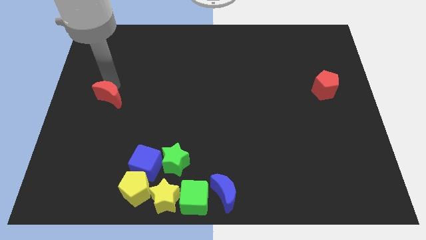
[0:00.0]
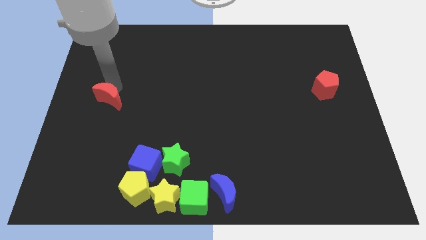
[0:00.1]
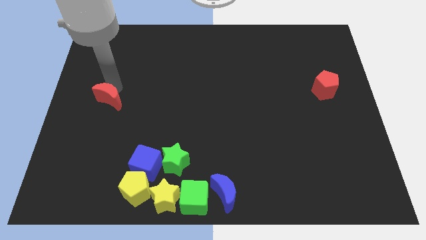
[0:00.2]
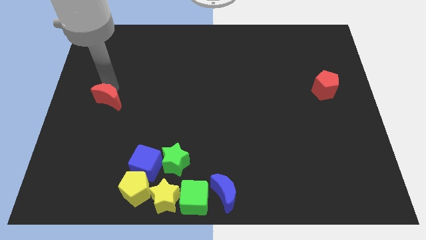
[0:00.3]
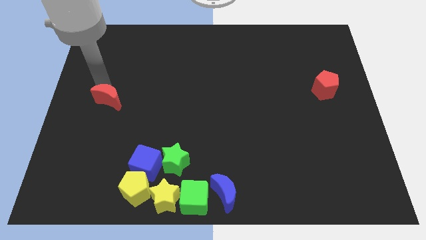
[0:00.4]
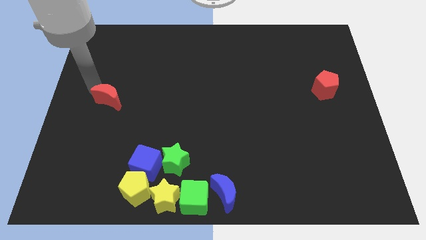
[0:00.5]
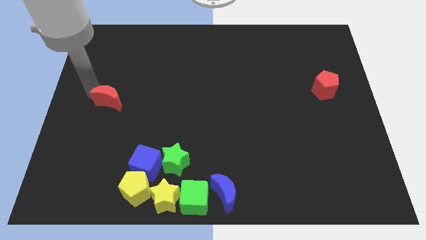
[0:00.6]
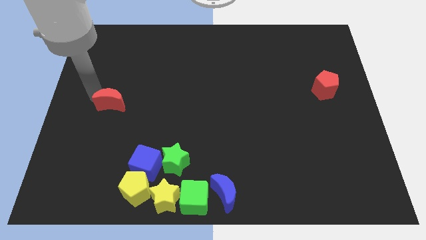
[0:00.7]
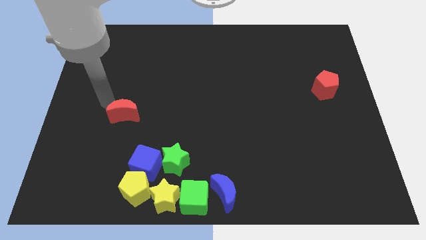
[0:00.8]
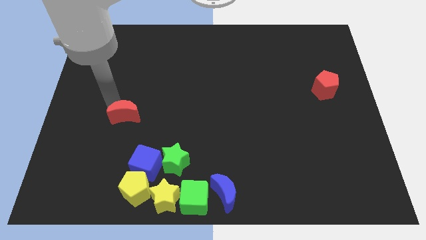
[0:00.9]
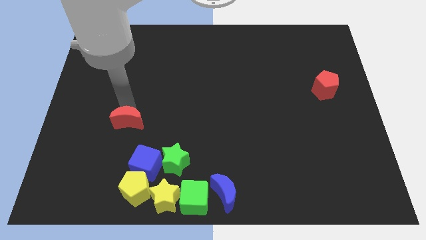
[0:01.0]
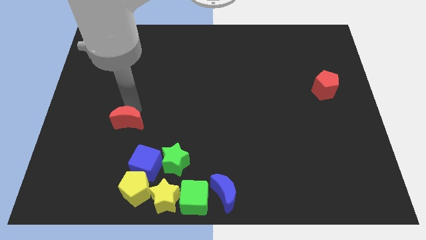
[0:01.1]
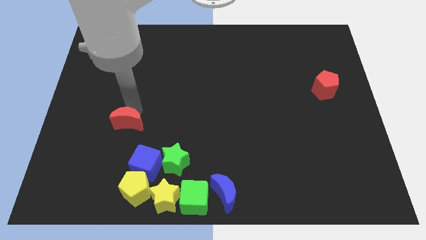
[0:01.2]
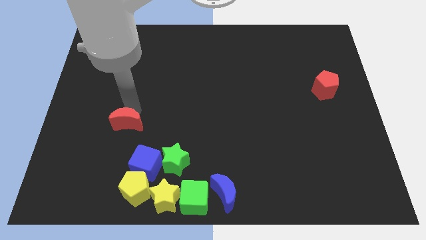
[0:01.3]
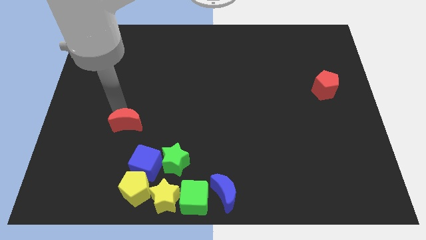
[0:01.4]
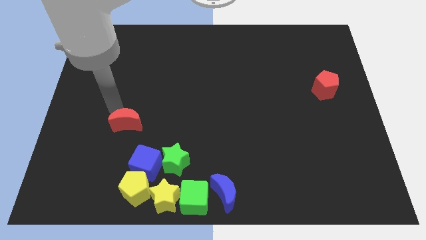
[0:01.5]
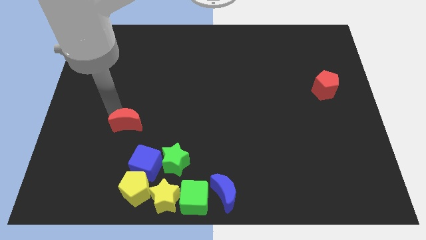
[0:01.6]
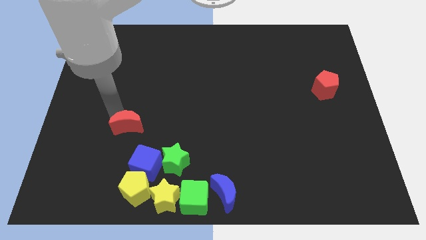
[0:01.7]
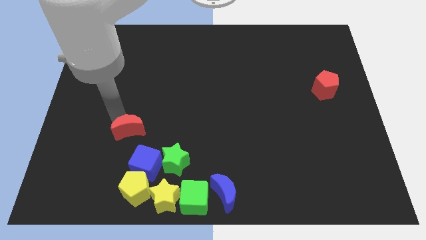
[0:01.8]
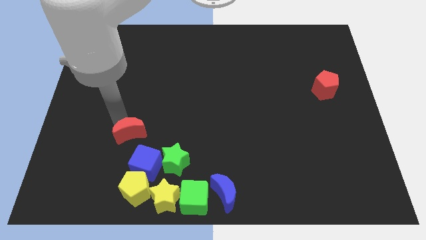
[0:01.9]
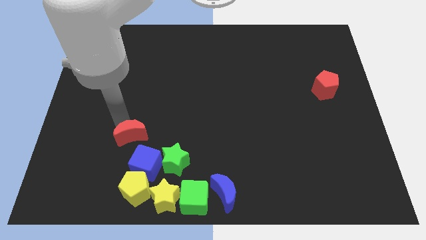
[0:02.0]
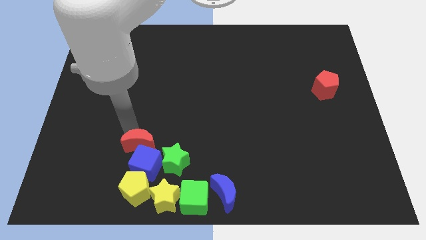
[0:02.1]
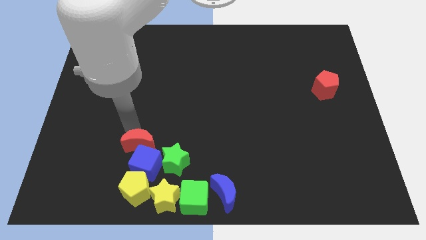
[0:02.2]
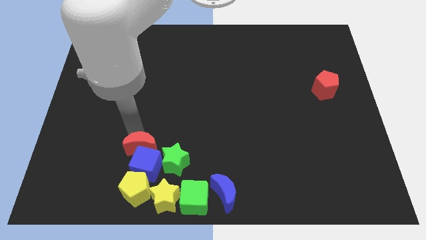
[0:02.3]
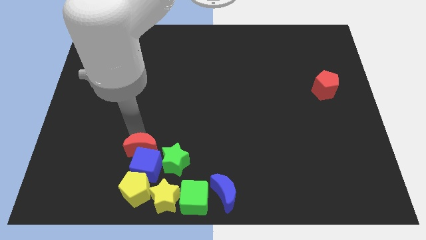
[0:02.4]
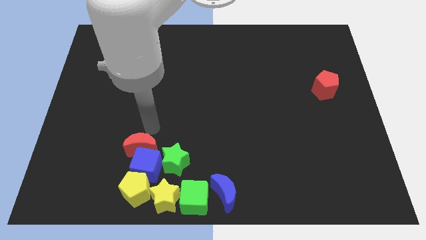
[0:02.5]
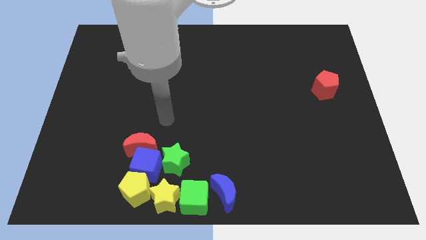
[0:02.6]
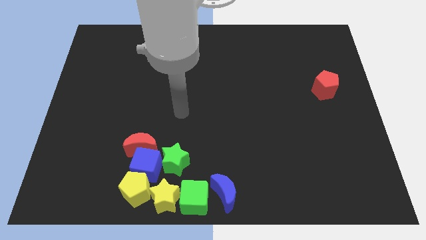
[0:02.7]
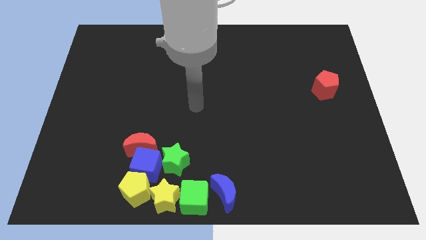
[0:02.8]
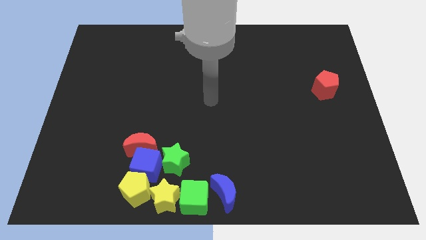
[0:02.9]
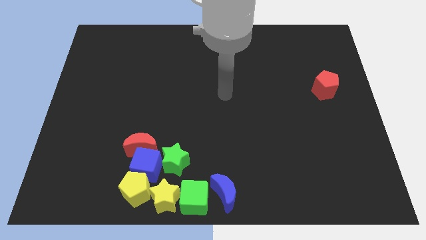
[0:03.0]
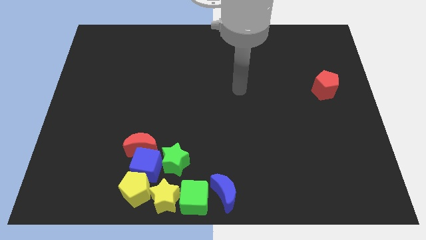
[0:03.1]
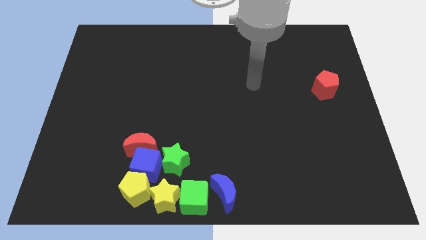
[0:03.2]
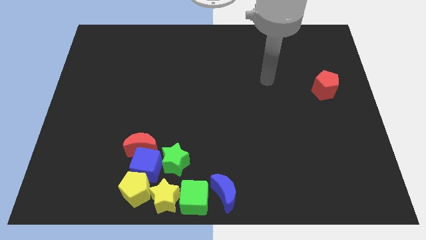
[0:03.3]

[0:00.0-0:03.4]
move the red moon into the blue cube

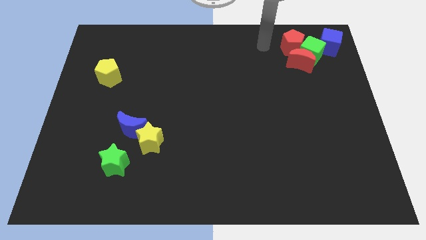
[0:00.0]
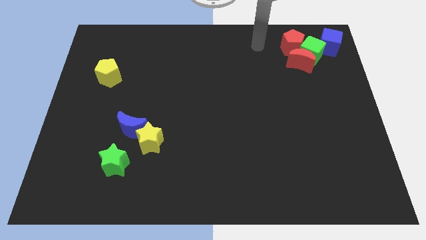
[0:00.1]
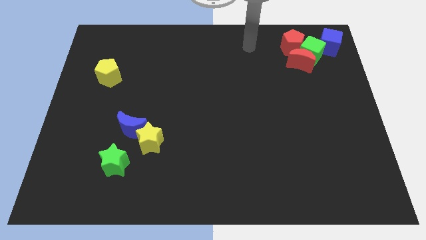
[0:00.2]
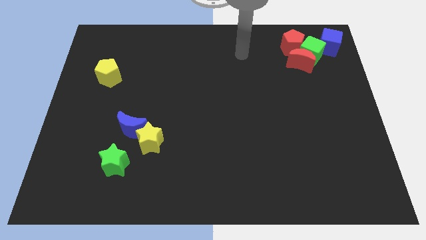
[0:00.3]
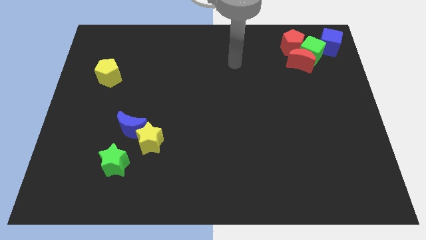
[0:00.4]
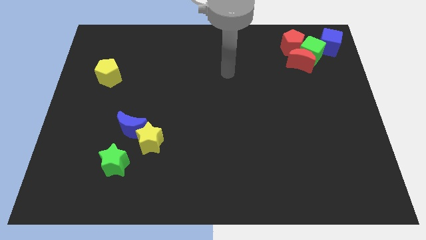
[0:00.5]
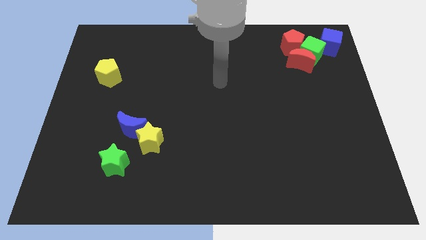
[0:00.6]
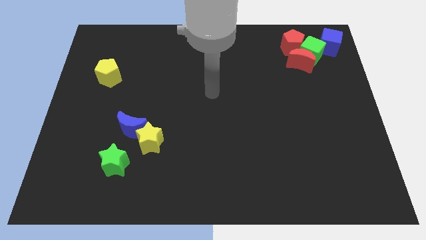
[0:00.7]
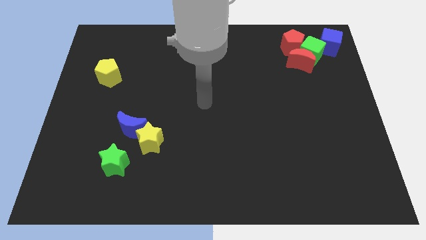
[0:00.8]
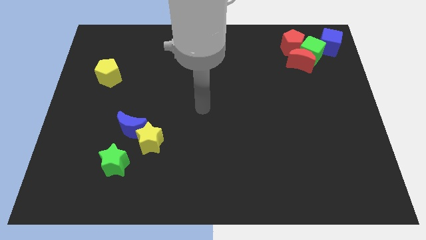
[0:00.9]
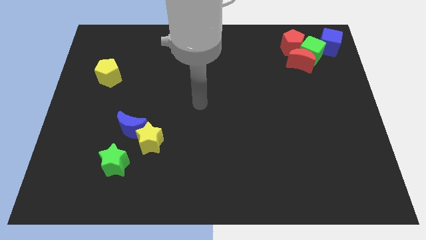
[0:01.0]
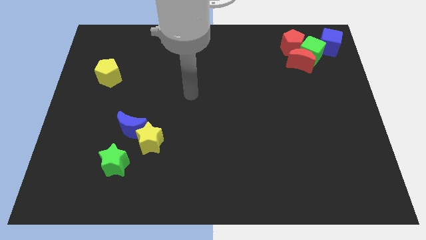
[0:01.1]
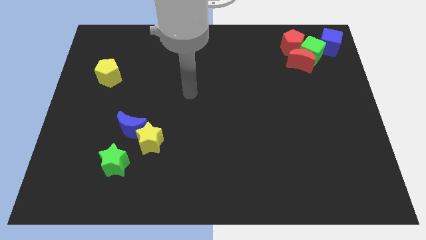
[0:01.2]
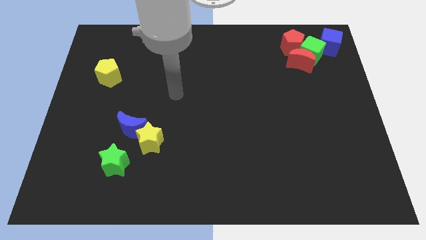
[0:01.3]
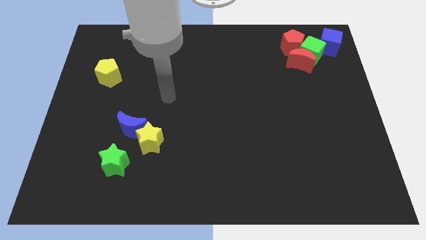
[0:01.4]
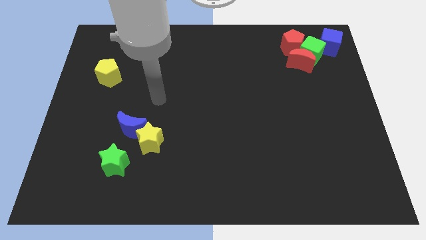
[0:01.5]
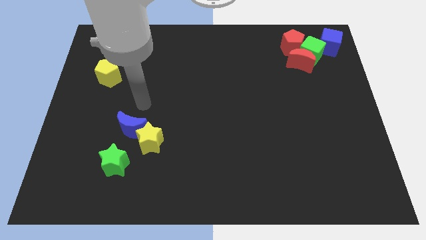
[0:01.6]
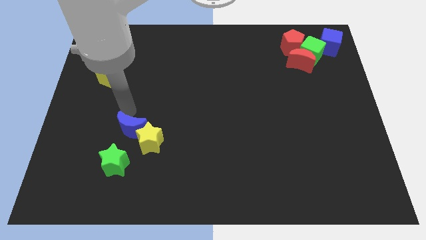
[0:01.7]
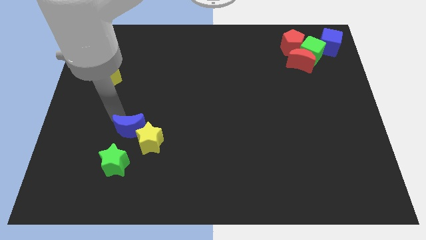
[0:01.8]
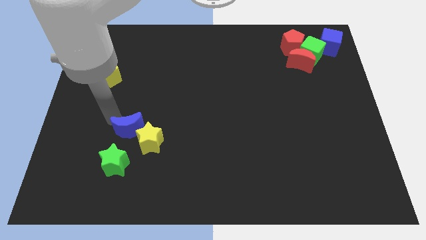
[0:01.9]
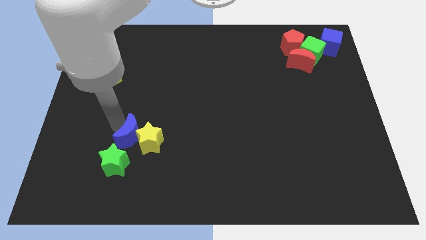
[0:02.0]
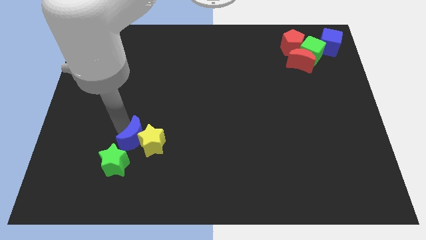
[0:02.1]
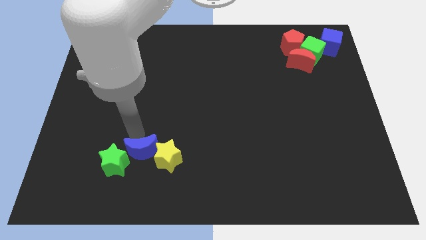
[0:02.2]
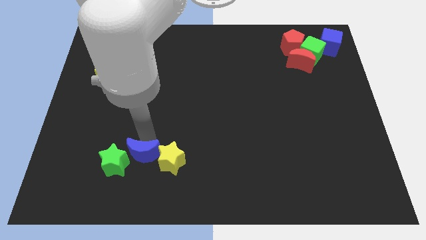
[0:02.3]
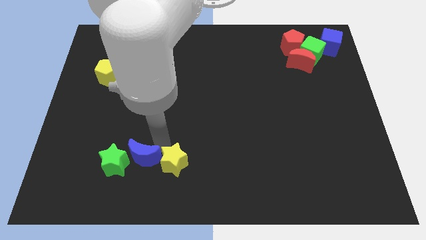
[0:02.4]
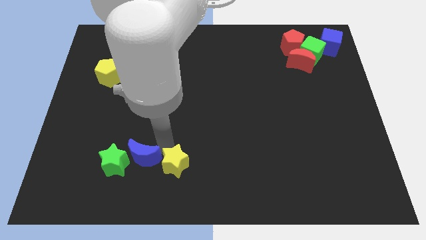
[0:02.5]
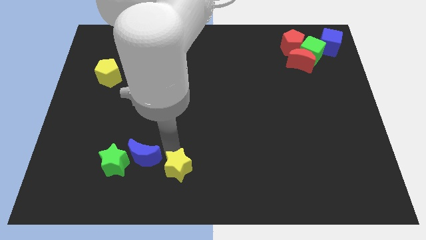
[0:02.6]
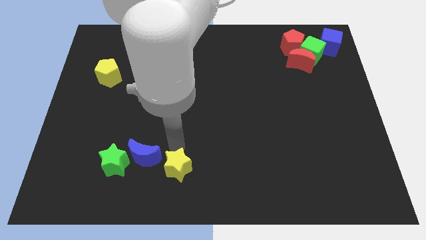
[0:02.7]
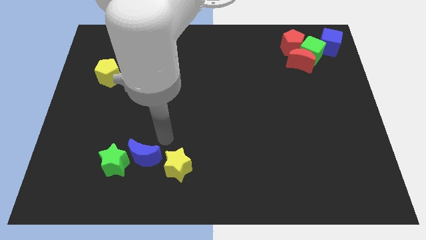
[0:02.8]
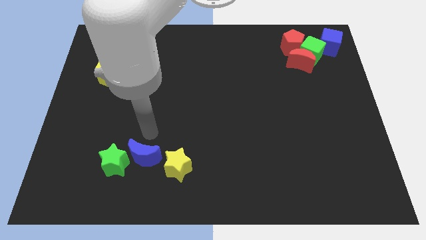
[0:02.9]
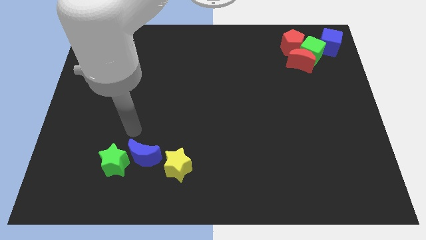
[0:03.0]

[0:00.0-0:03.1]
push the yellow star with the blue moon towards the right of the green star

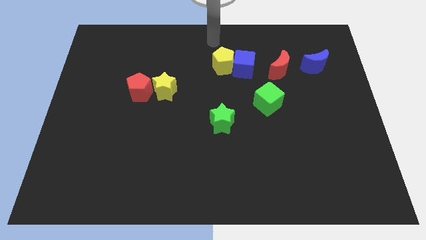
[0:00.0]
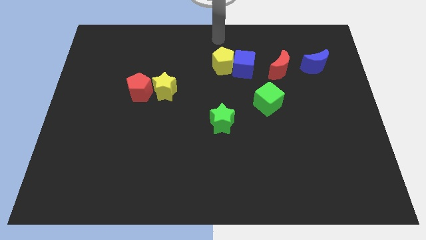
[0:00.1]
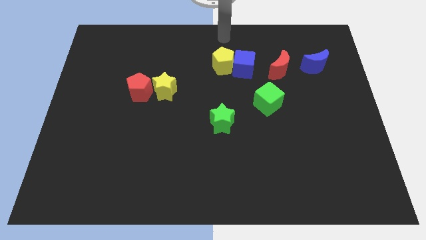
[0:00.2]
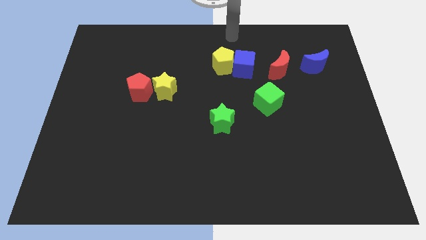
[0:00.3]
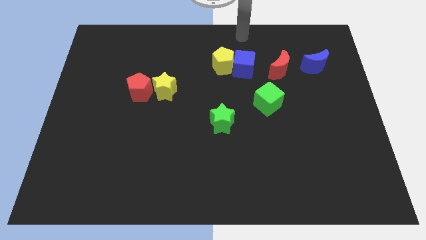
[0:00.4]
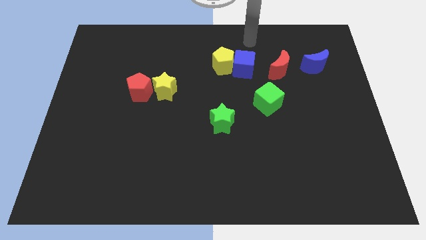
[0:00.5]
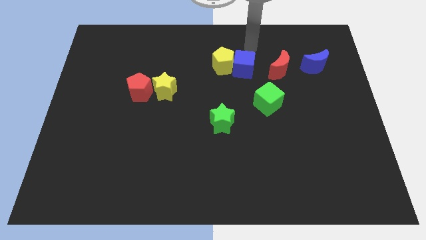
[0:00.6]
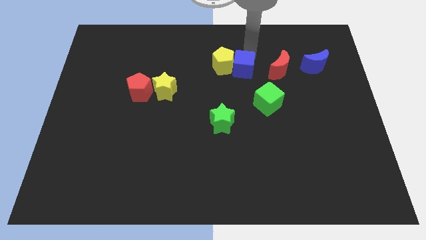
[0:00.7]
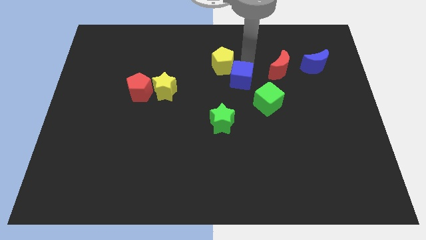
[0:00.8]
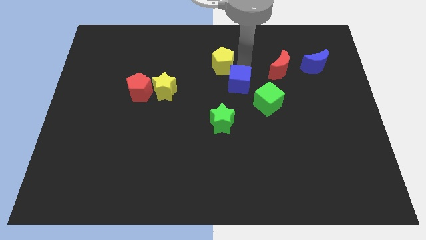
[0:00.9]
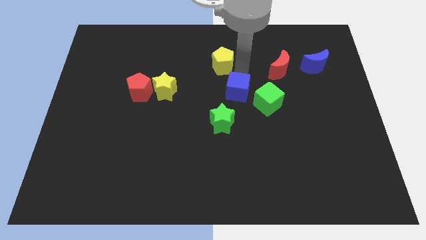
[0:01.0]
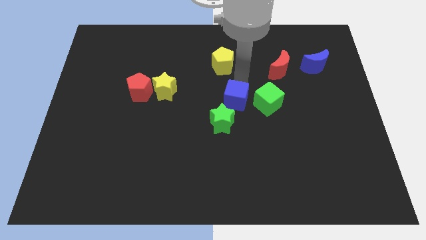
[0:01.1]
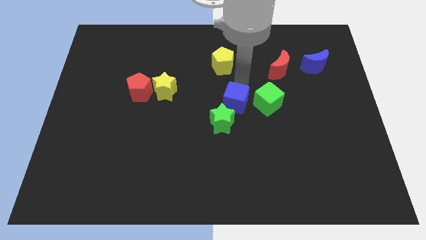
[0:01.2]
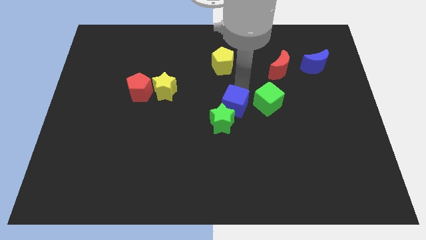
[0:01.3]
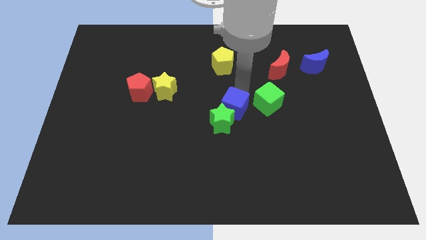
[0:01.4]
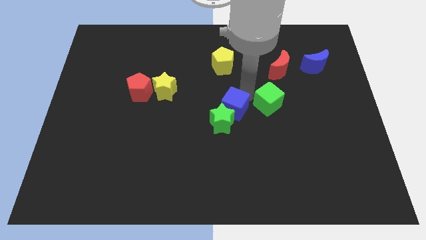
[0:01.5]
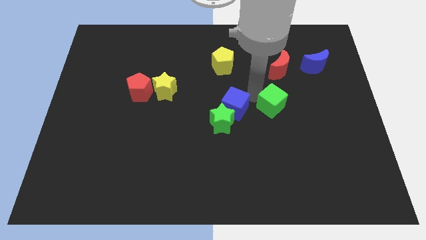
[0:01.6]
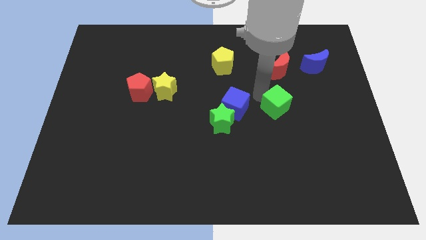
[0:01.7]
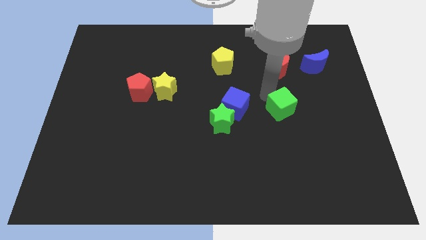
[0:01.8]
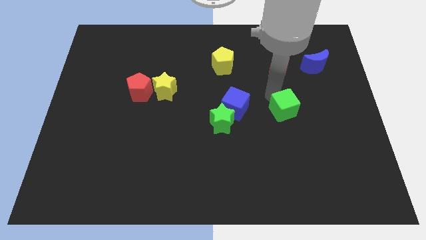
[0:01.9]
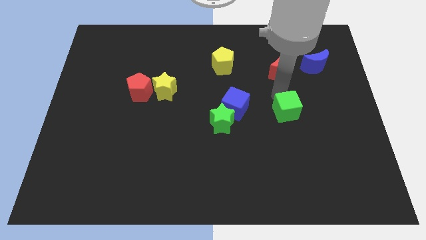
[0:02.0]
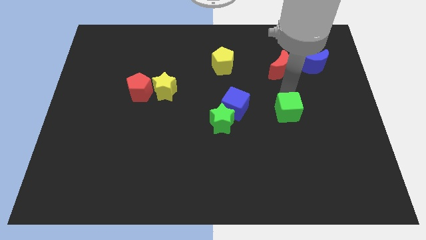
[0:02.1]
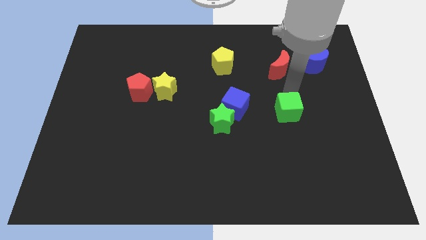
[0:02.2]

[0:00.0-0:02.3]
move the green cube below the red crescent

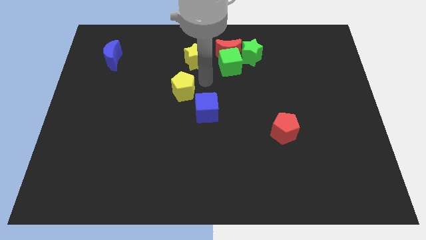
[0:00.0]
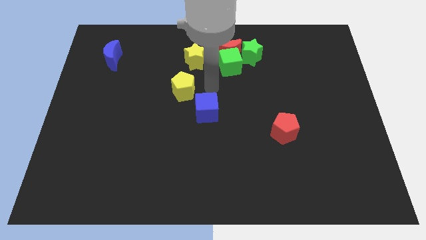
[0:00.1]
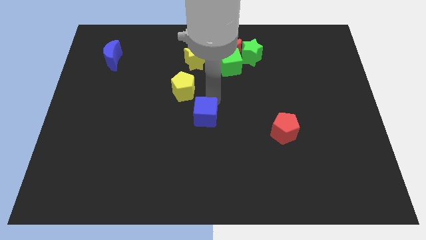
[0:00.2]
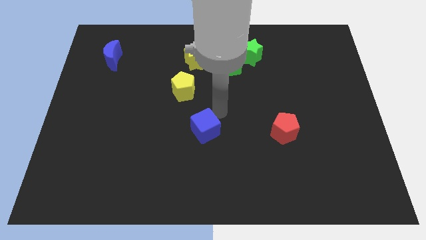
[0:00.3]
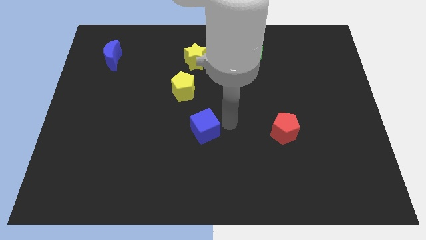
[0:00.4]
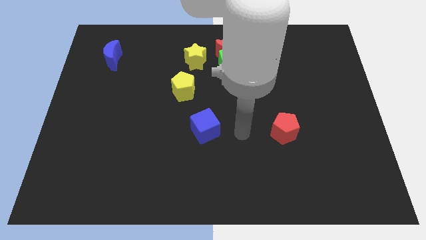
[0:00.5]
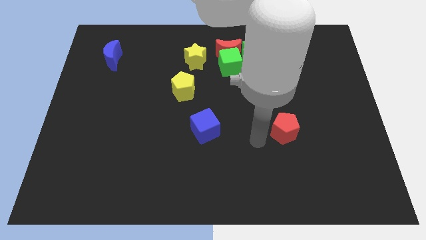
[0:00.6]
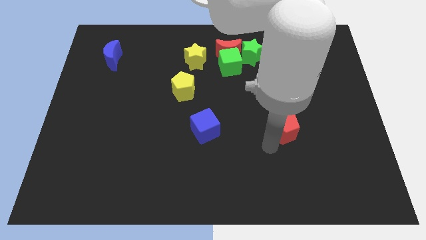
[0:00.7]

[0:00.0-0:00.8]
slightly push the blue cube towards the bottom of the board
